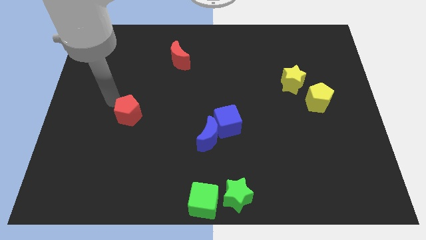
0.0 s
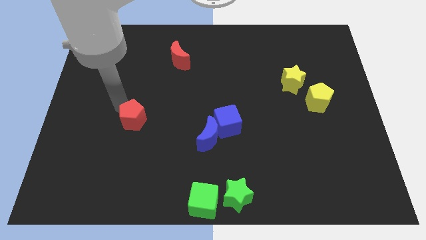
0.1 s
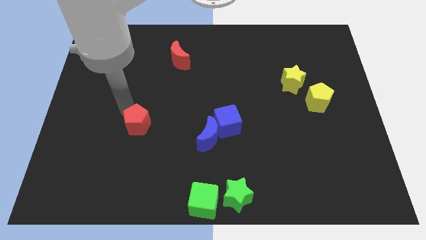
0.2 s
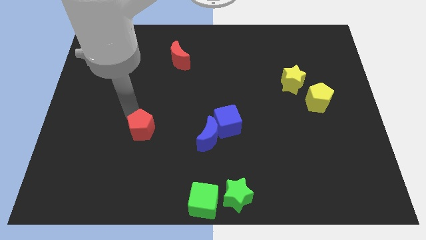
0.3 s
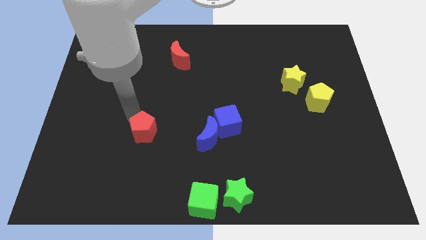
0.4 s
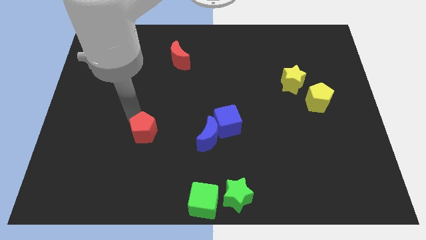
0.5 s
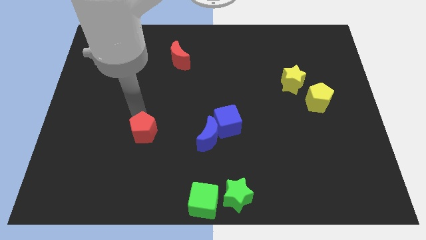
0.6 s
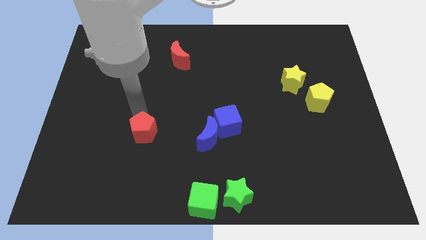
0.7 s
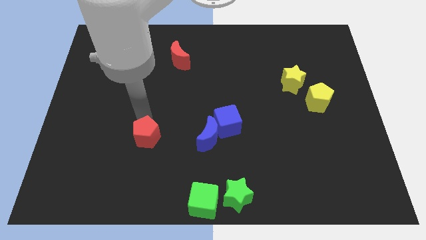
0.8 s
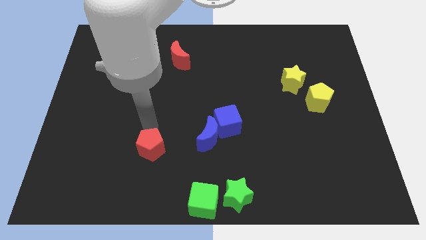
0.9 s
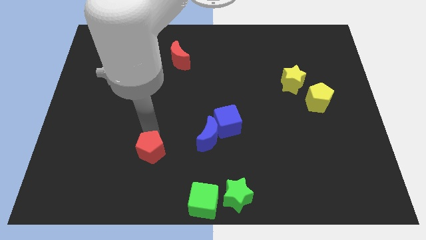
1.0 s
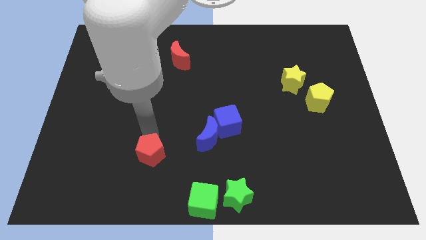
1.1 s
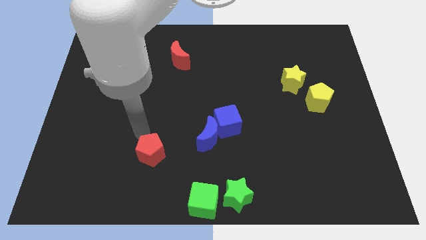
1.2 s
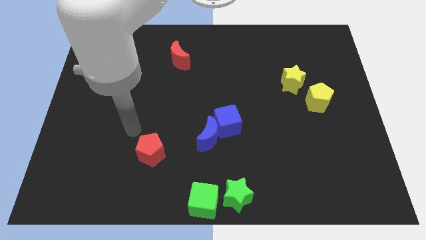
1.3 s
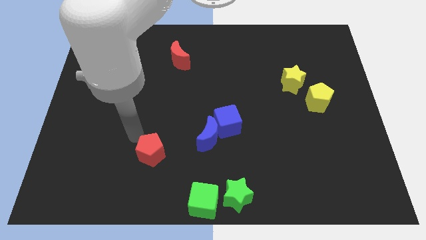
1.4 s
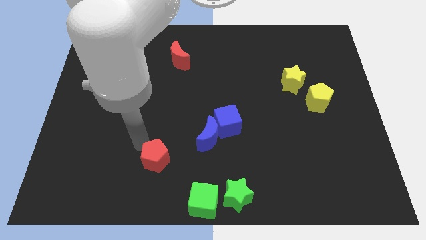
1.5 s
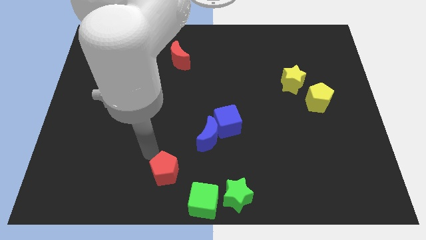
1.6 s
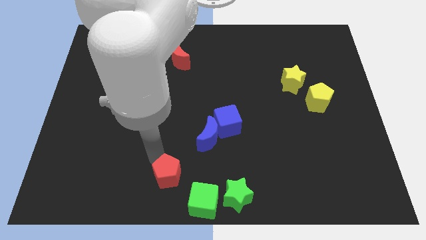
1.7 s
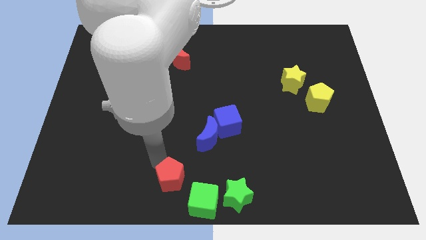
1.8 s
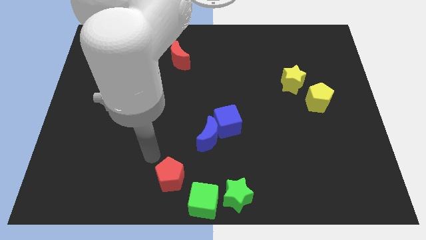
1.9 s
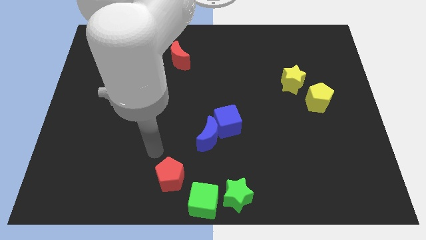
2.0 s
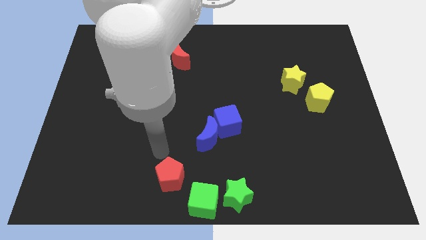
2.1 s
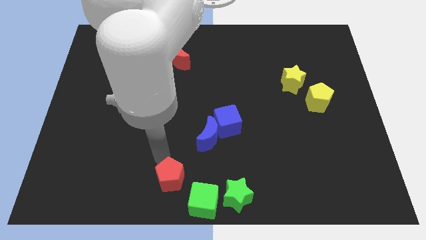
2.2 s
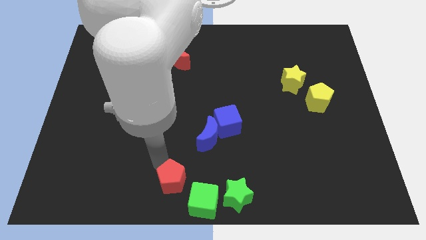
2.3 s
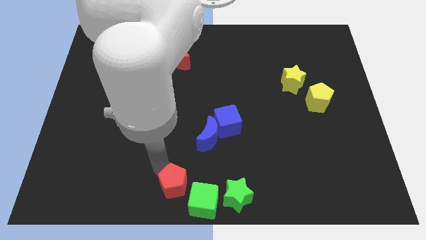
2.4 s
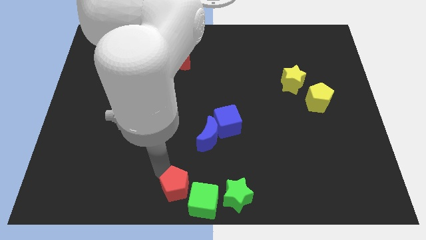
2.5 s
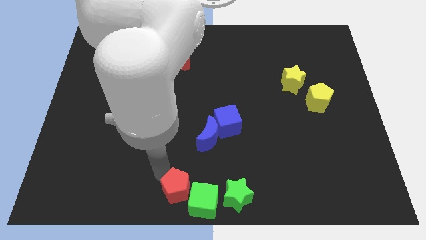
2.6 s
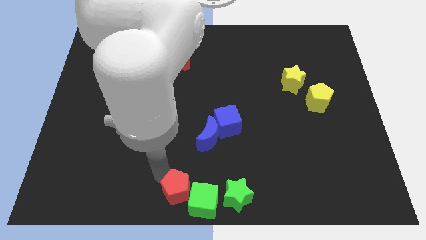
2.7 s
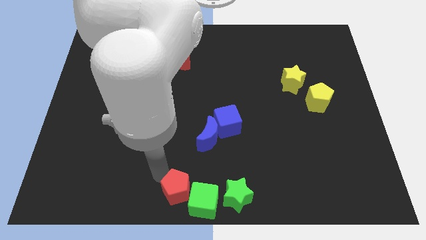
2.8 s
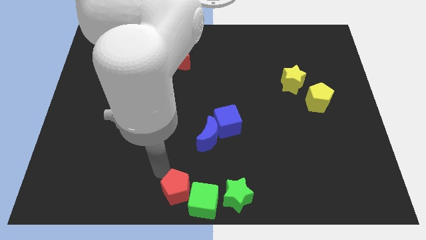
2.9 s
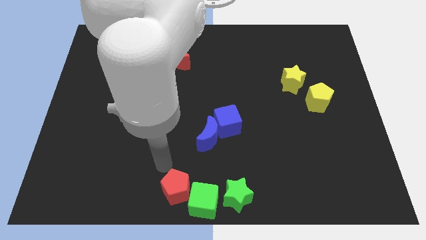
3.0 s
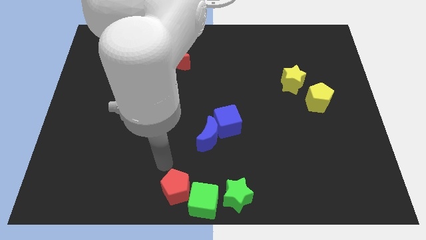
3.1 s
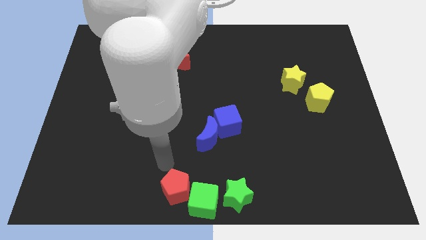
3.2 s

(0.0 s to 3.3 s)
move red pentagon left of the green cube

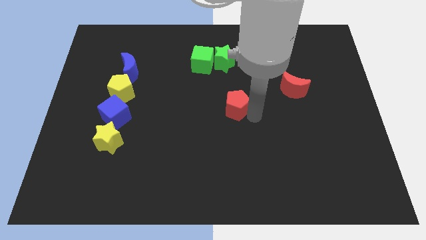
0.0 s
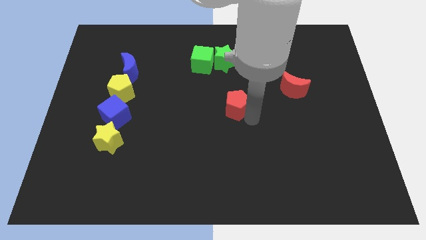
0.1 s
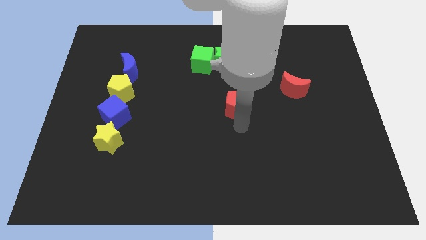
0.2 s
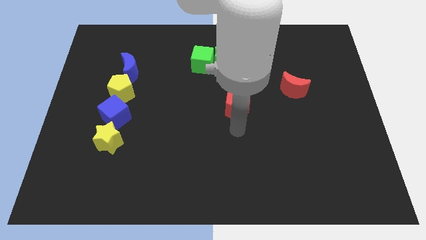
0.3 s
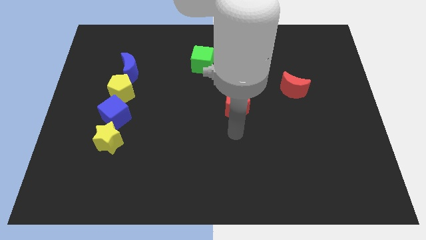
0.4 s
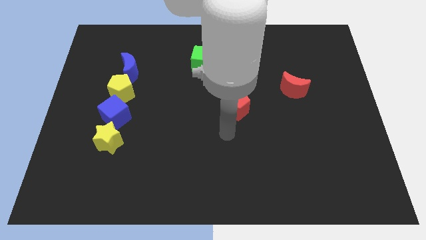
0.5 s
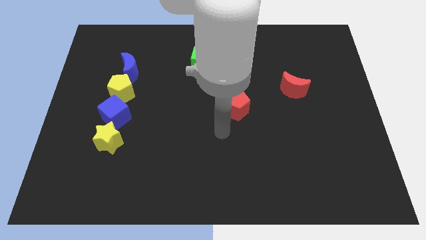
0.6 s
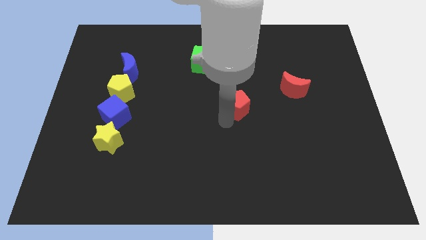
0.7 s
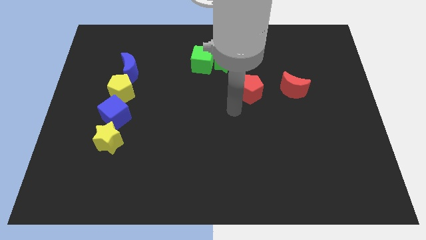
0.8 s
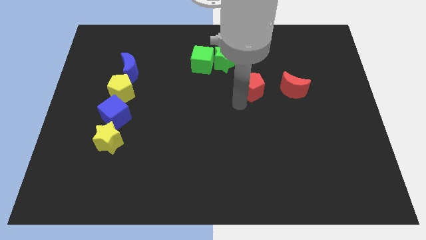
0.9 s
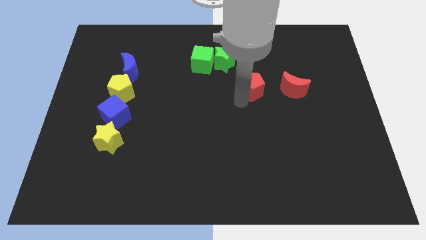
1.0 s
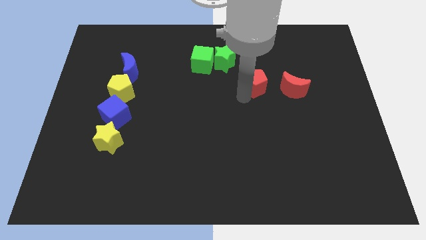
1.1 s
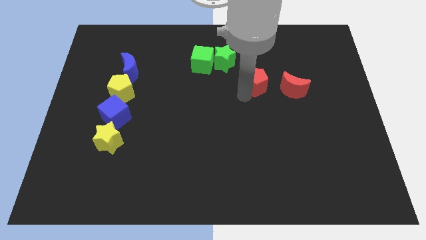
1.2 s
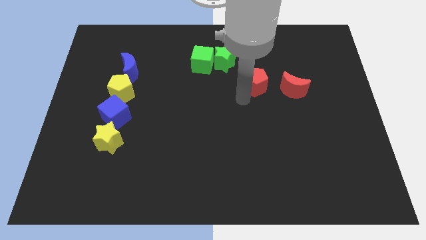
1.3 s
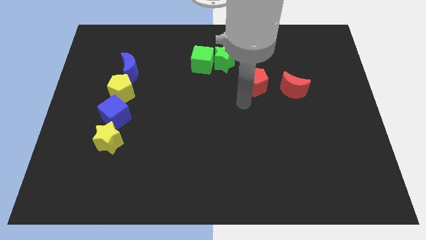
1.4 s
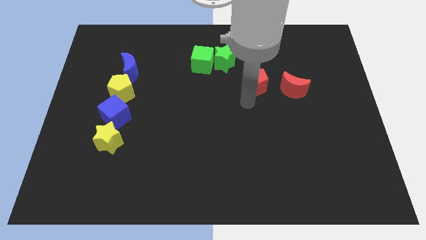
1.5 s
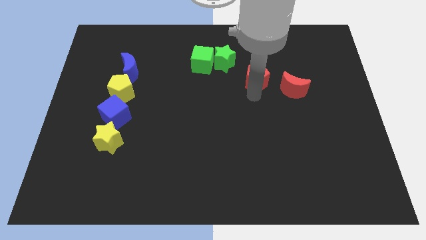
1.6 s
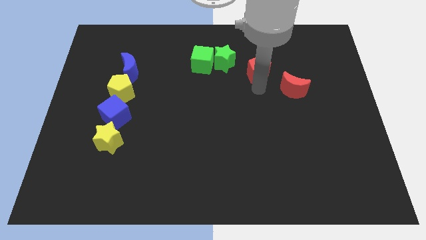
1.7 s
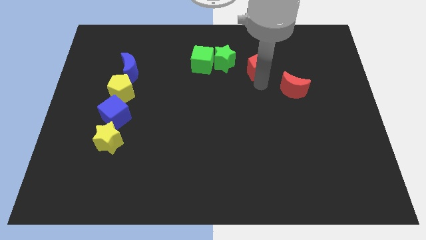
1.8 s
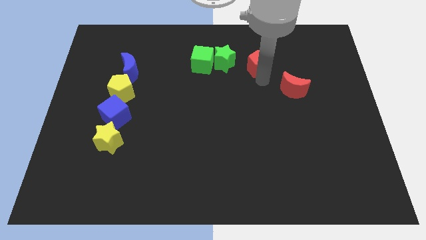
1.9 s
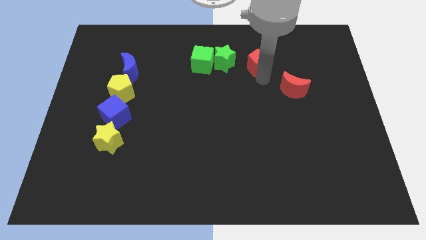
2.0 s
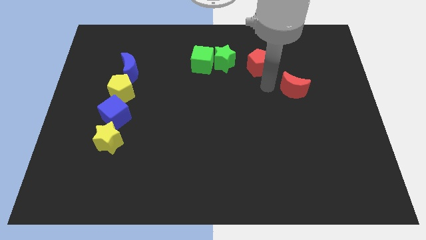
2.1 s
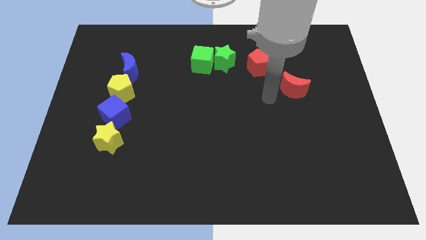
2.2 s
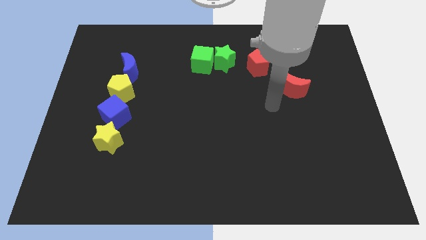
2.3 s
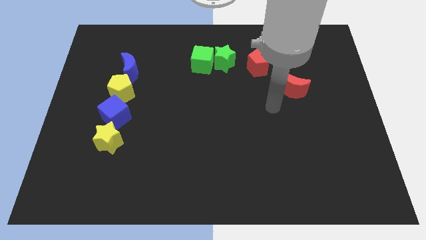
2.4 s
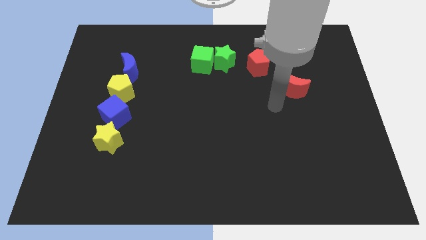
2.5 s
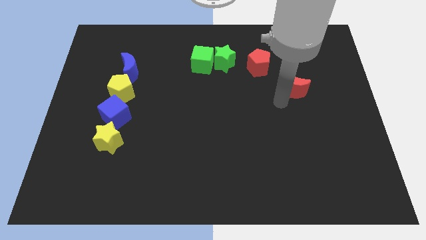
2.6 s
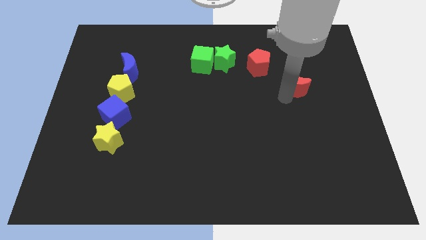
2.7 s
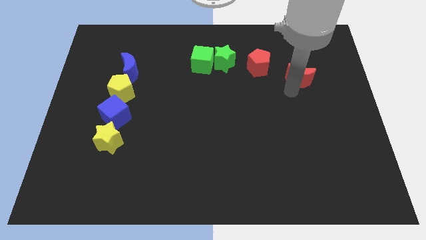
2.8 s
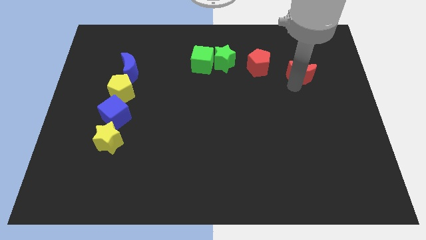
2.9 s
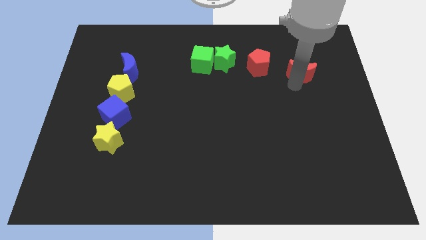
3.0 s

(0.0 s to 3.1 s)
place the red pentagon to the right of green star

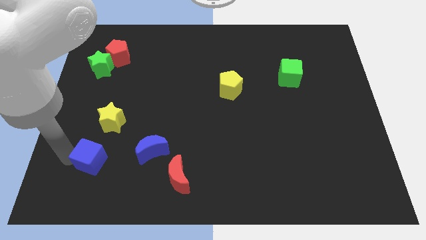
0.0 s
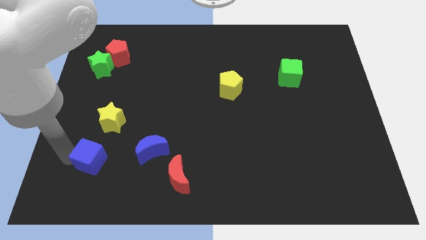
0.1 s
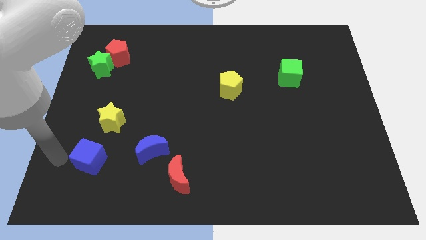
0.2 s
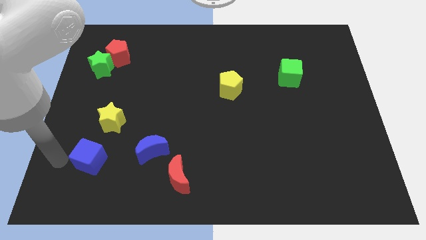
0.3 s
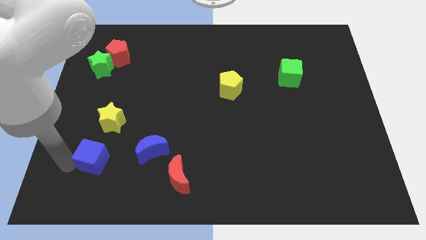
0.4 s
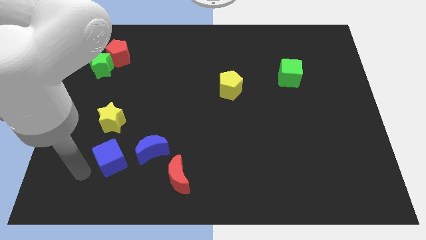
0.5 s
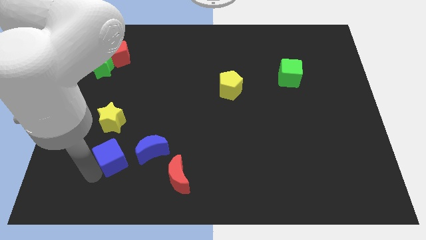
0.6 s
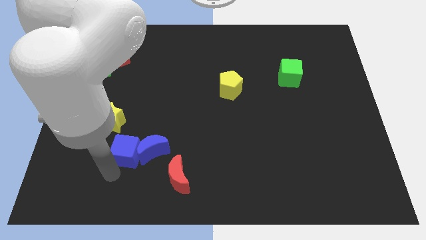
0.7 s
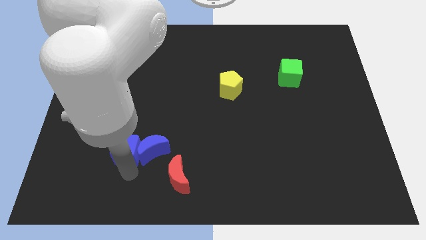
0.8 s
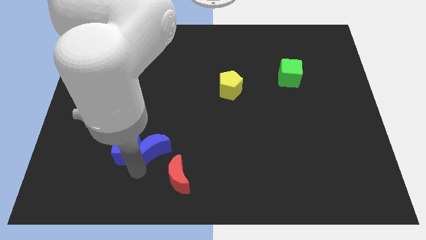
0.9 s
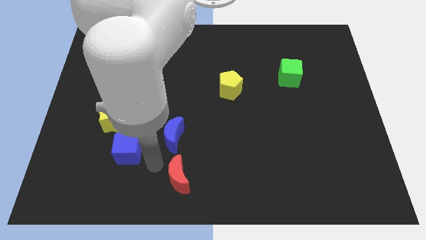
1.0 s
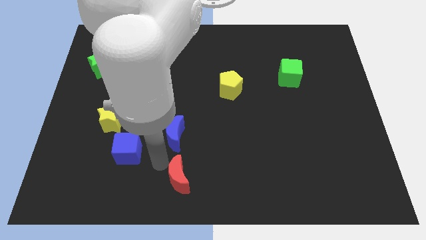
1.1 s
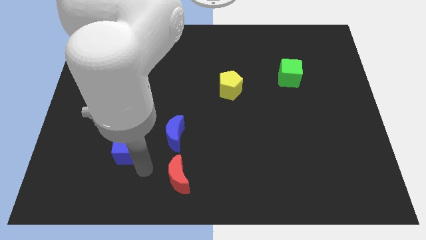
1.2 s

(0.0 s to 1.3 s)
push the blue moon vertically above the red moon

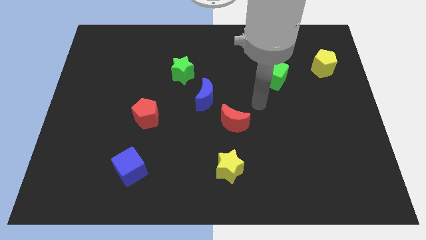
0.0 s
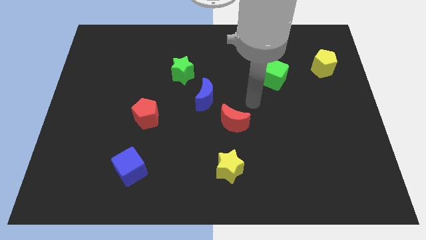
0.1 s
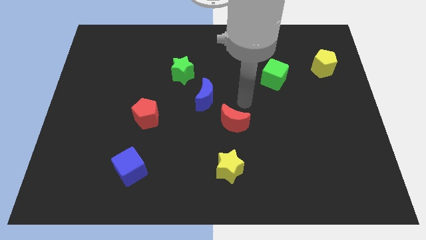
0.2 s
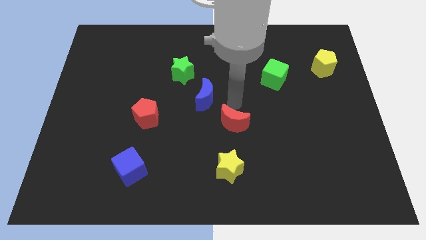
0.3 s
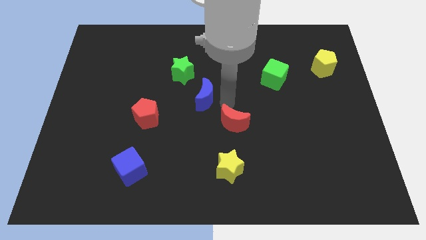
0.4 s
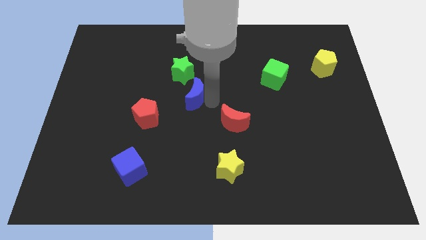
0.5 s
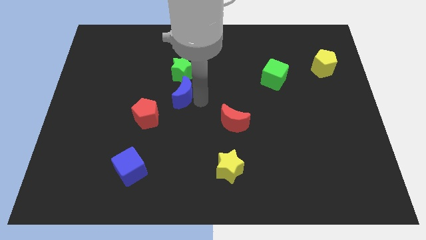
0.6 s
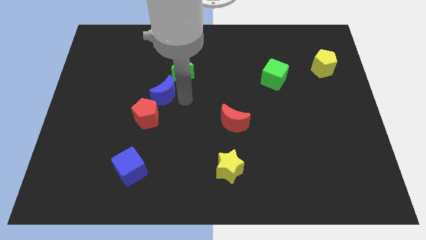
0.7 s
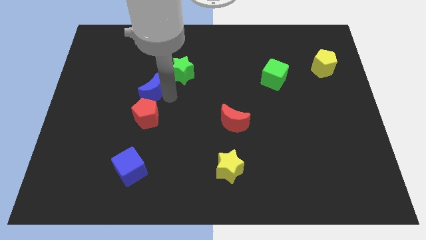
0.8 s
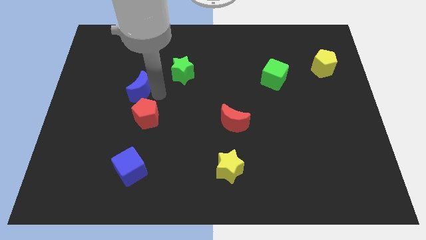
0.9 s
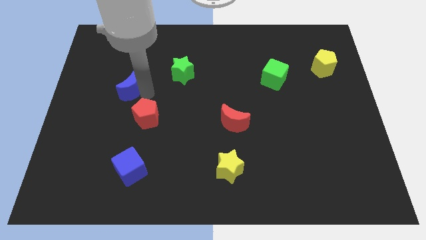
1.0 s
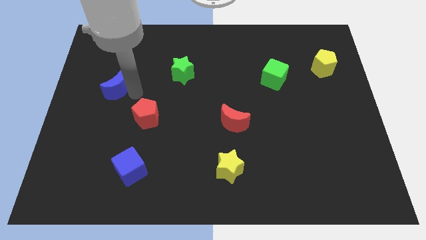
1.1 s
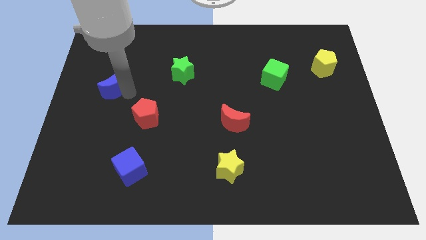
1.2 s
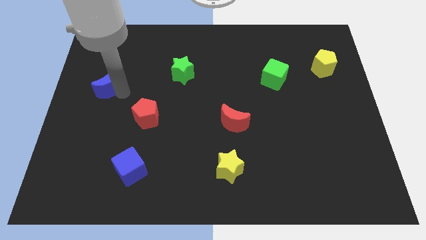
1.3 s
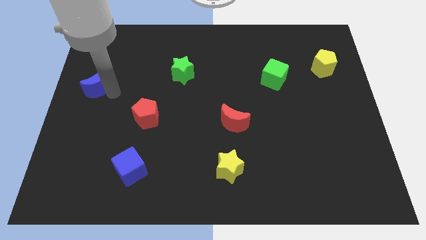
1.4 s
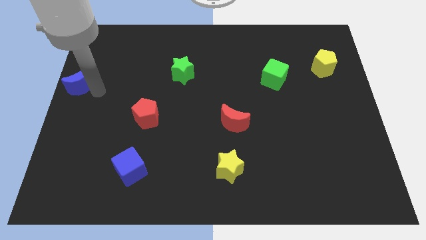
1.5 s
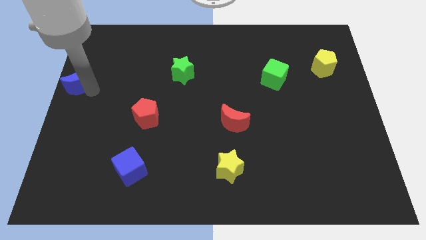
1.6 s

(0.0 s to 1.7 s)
slide the blue moon to the center left of the board
